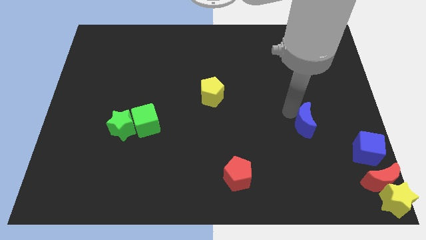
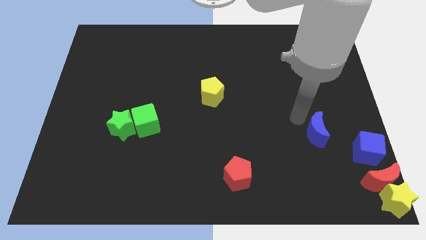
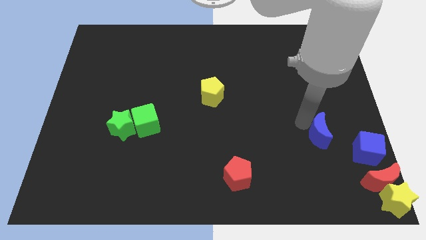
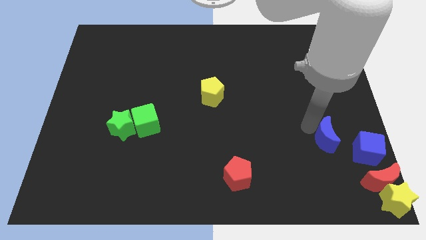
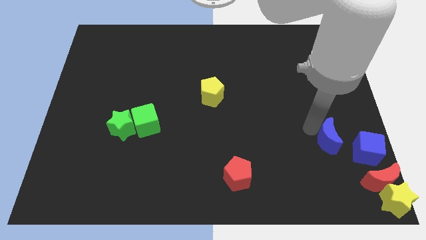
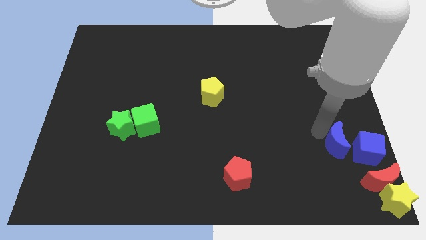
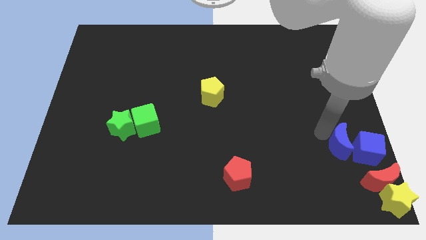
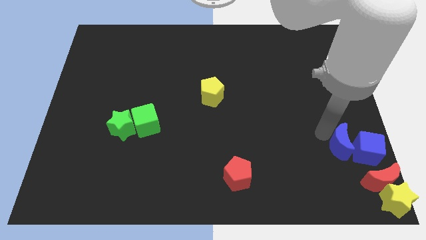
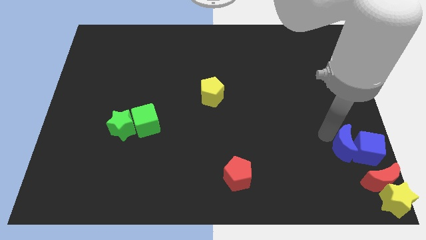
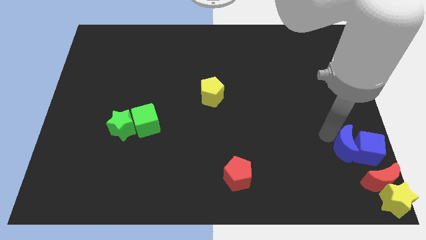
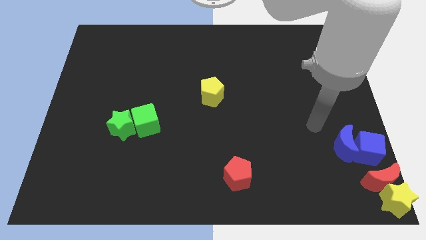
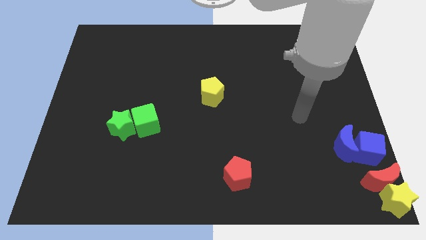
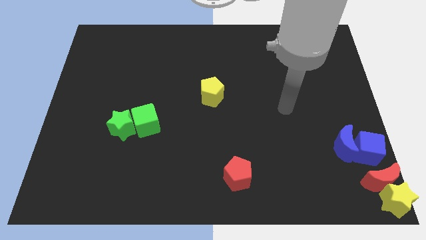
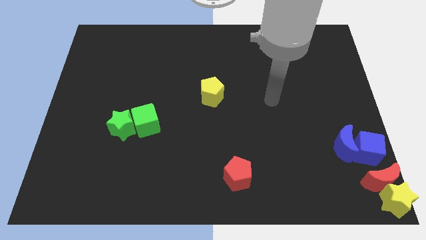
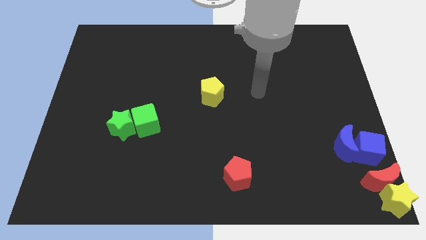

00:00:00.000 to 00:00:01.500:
move the blue crescent to the left side of the blue cube

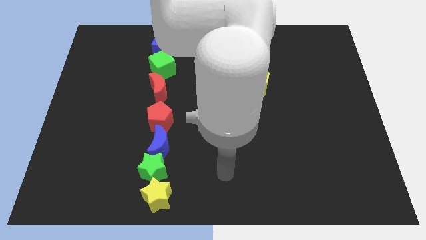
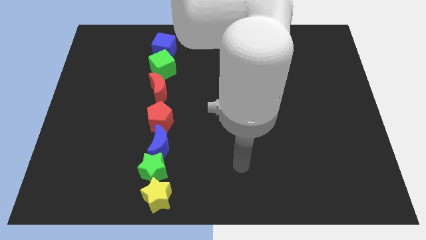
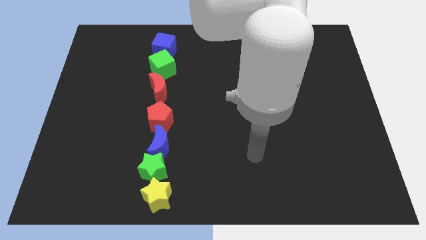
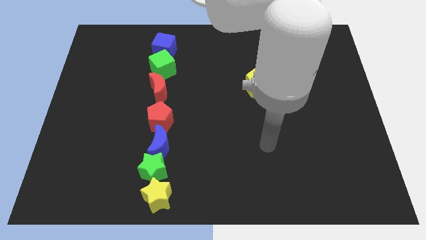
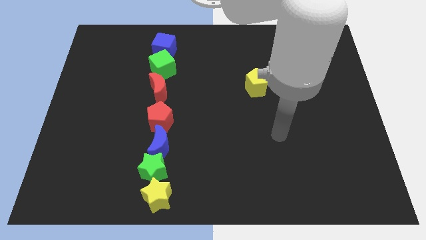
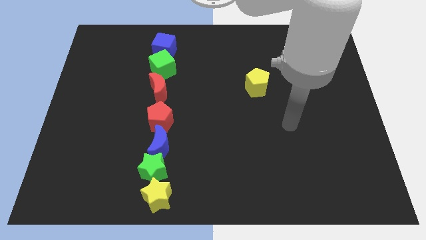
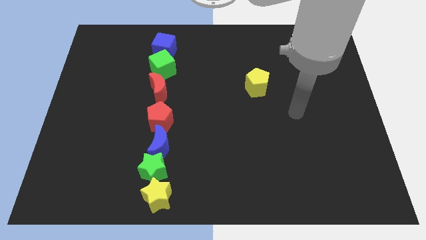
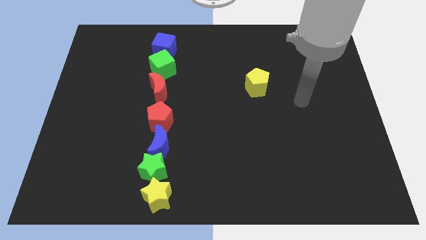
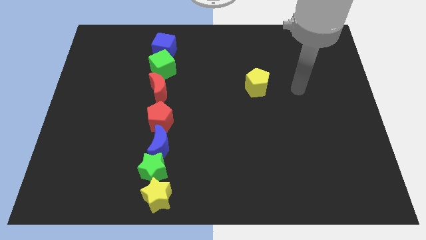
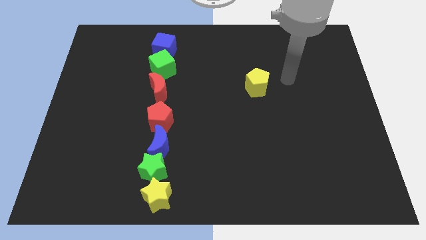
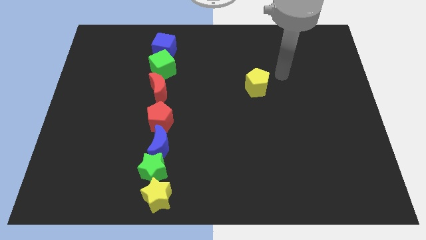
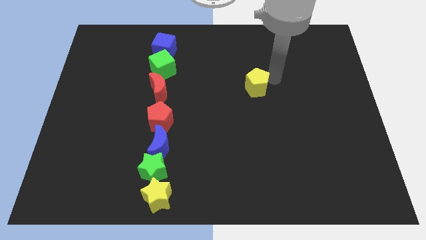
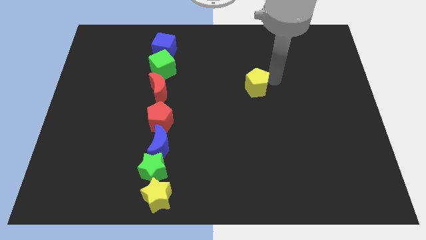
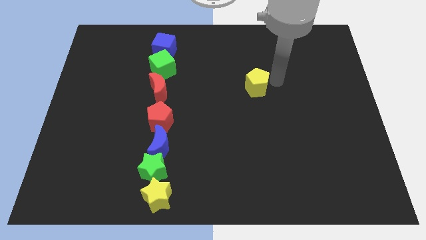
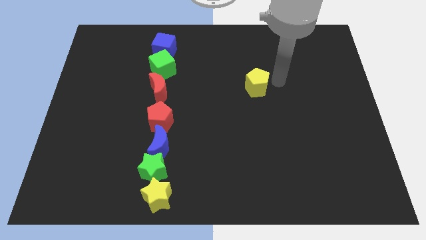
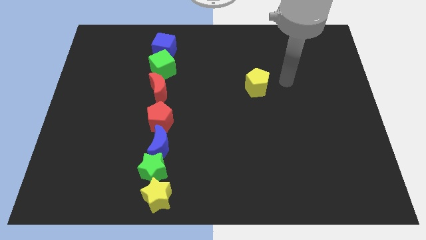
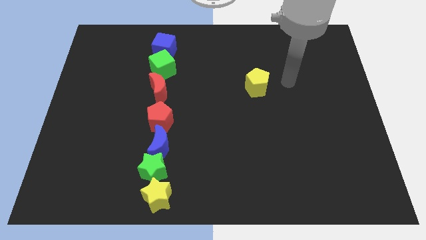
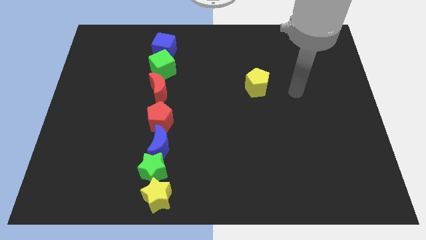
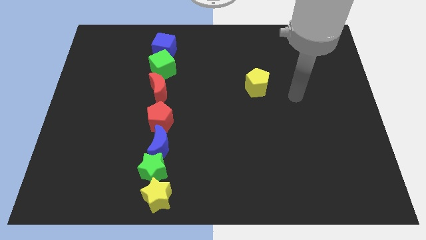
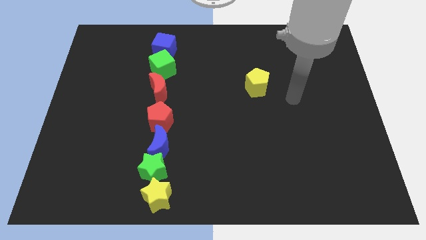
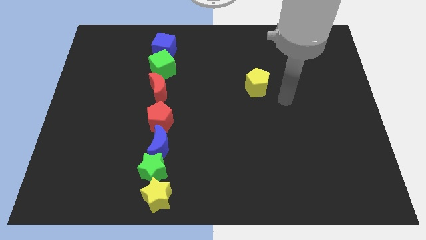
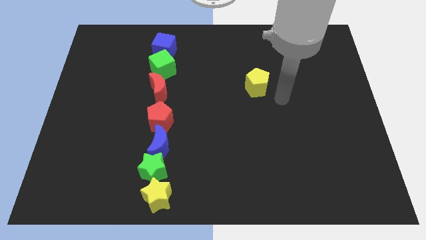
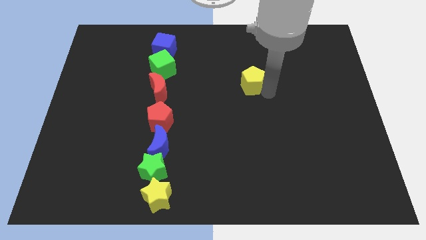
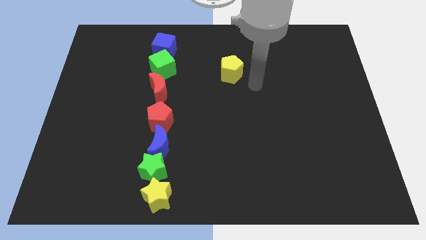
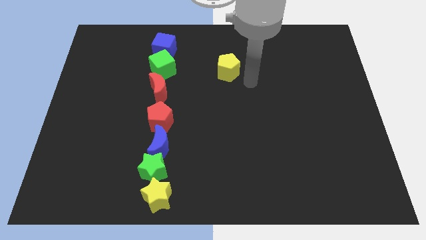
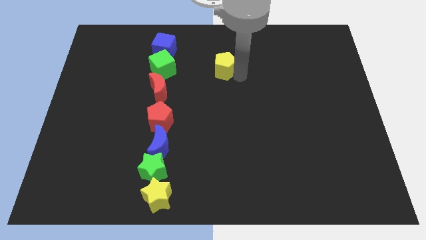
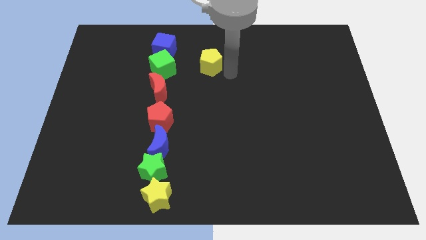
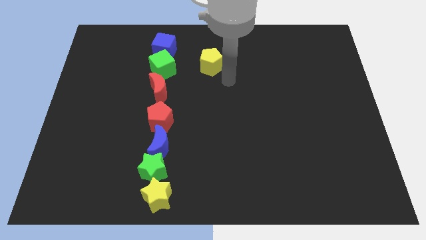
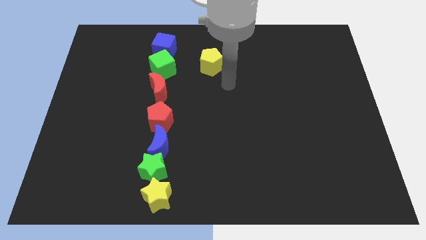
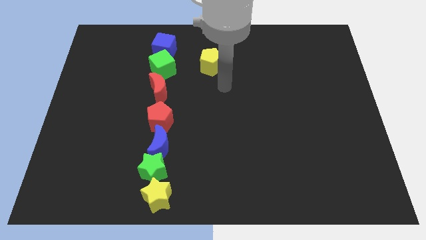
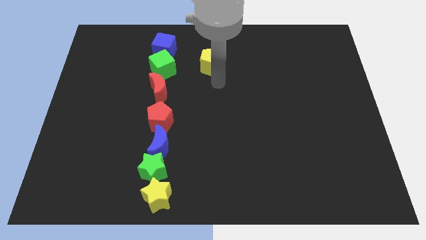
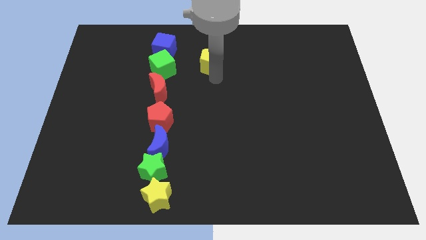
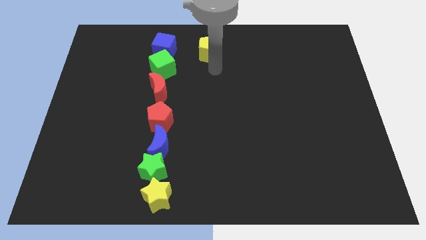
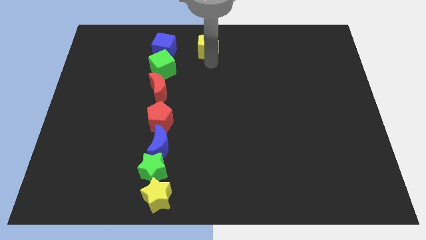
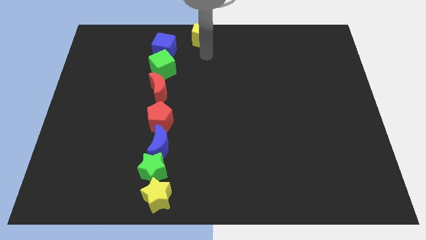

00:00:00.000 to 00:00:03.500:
move the yellow pentagon horizontally right to the blue cube

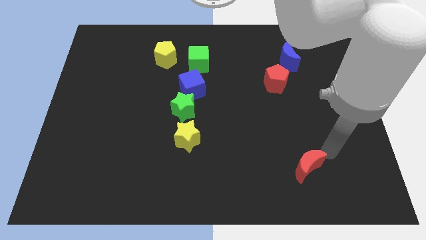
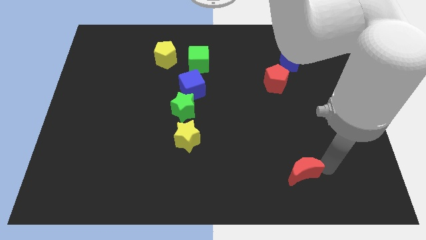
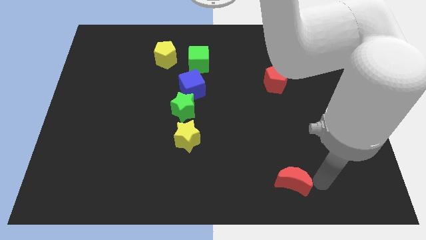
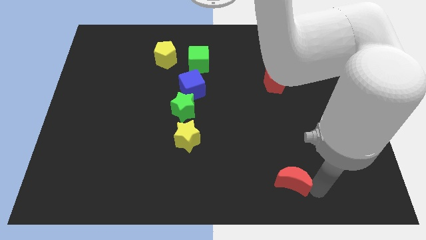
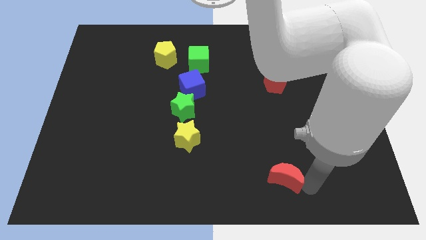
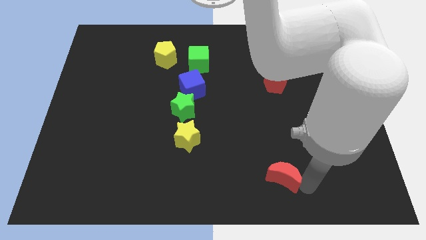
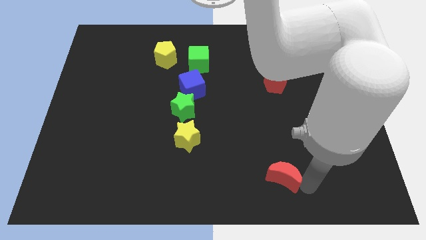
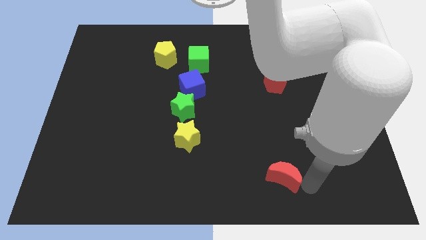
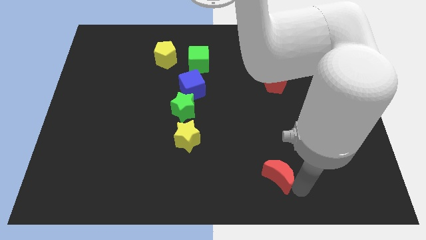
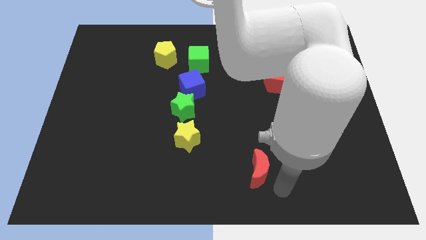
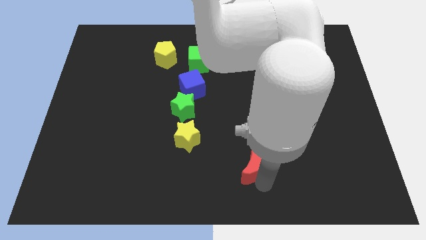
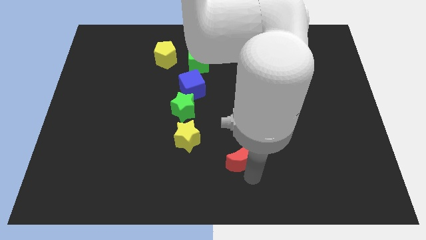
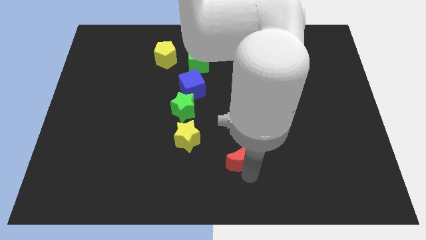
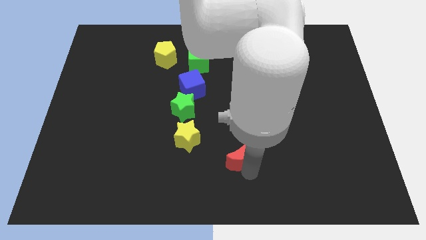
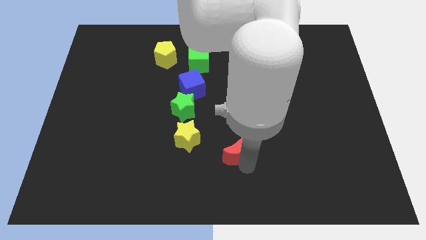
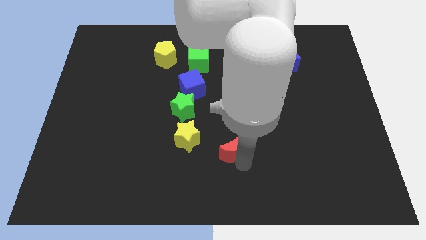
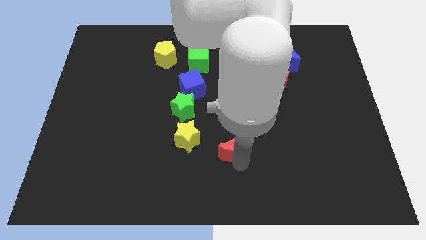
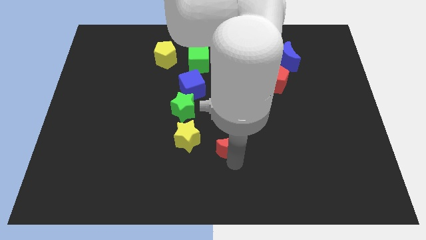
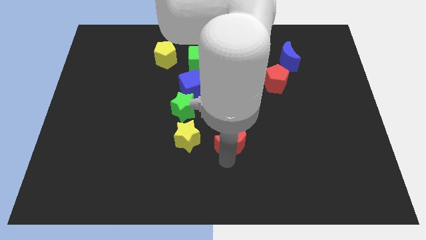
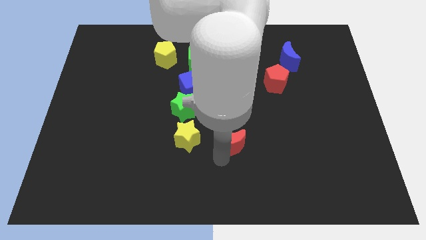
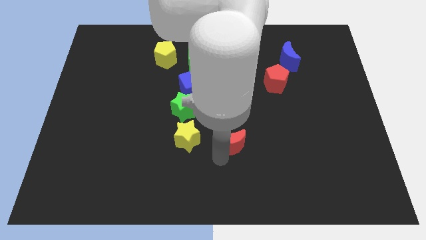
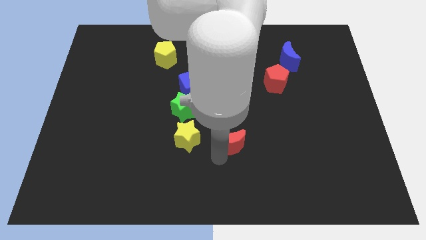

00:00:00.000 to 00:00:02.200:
place the red moon to the right of the yellow star

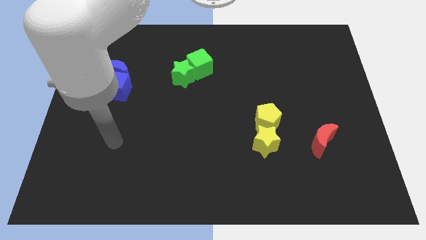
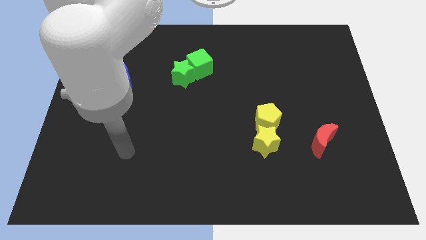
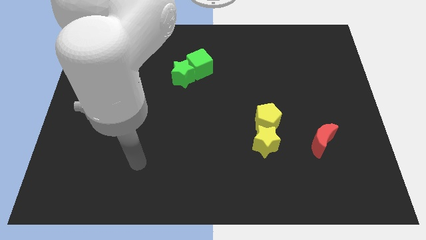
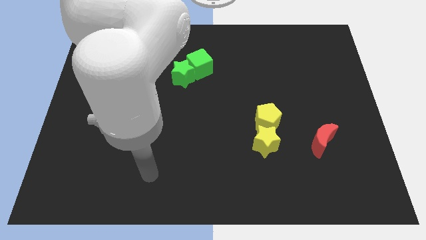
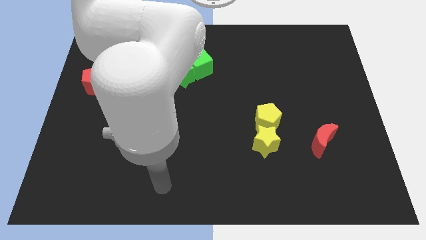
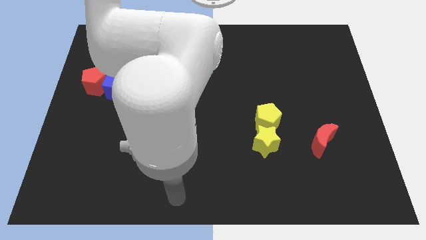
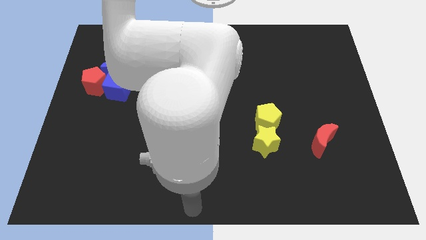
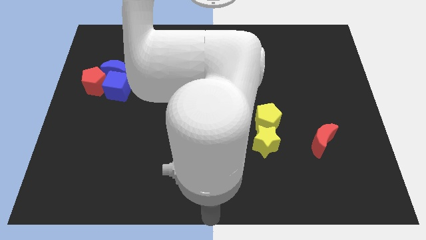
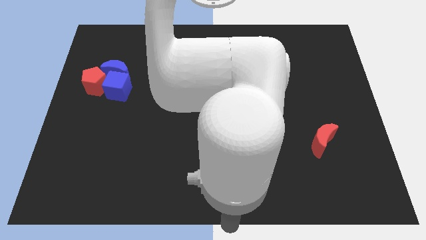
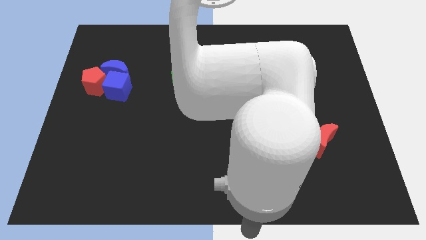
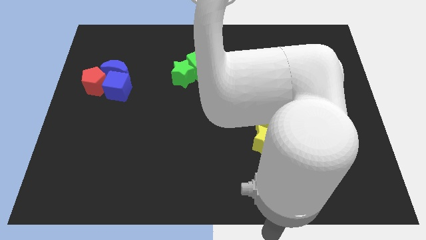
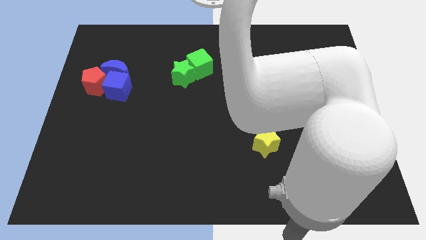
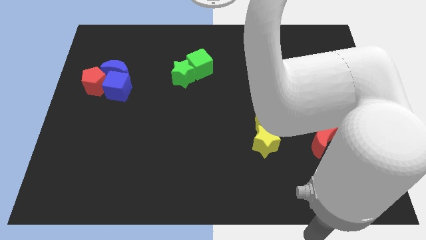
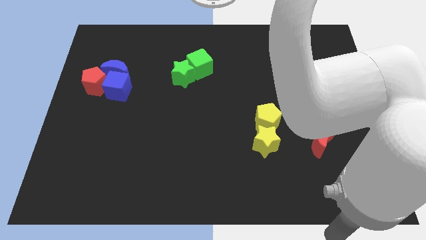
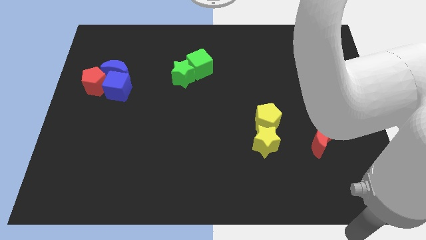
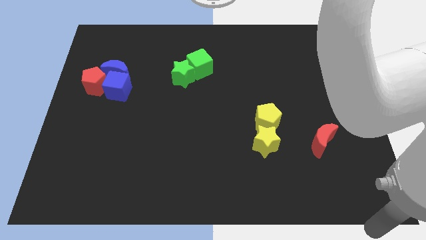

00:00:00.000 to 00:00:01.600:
move your hand towards the bottom right of the board
